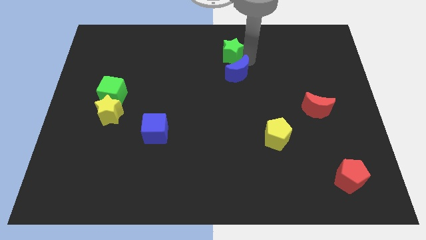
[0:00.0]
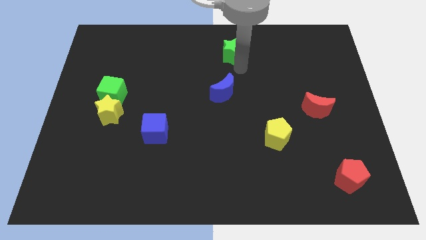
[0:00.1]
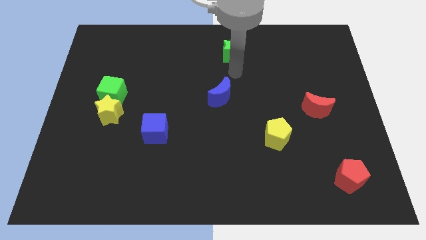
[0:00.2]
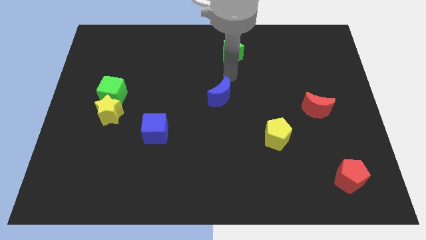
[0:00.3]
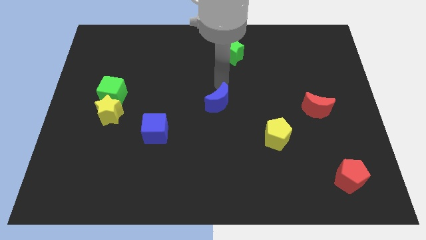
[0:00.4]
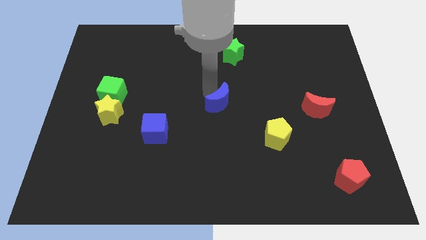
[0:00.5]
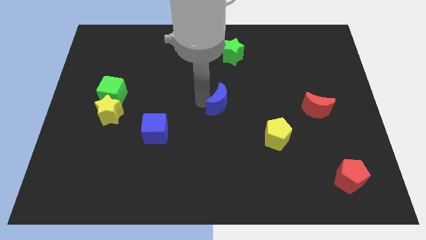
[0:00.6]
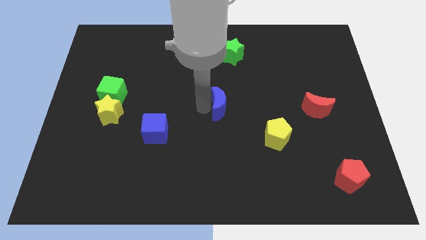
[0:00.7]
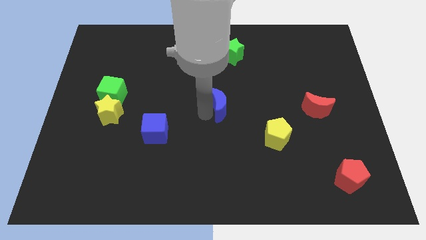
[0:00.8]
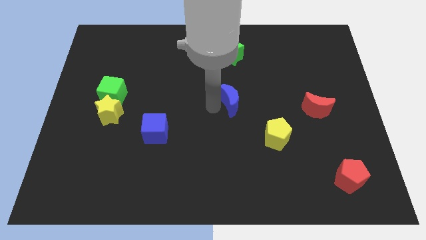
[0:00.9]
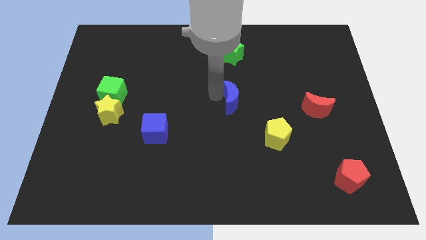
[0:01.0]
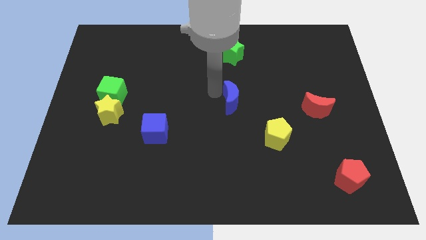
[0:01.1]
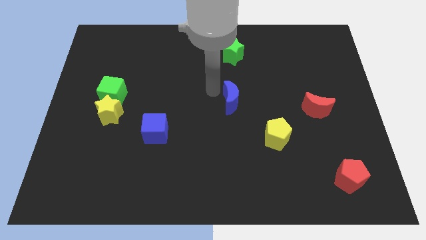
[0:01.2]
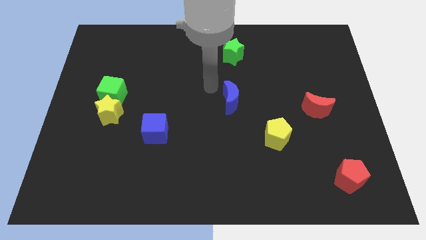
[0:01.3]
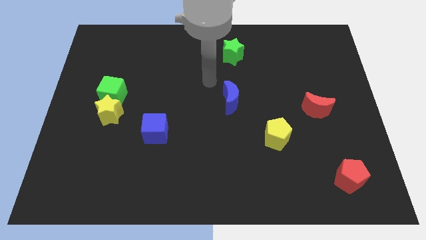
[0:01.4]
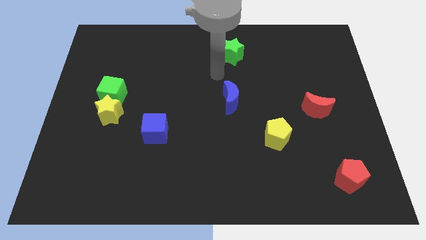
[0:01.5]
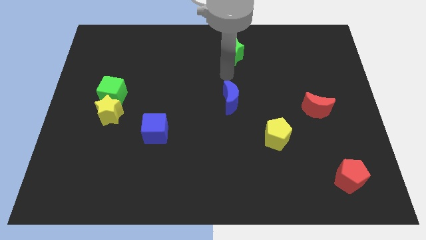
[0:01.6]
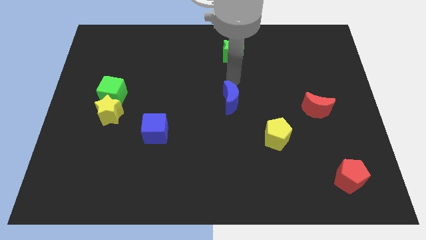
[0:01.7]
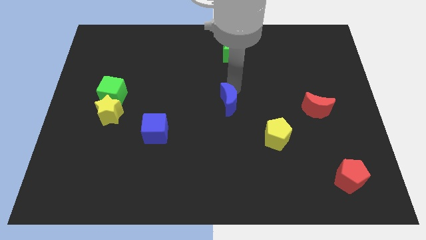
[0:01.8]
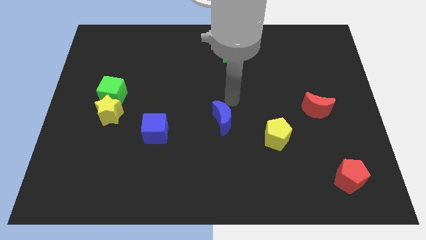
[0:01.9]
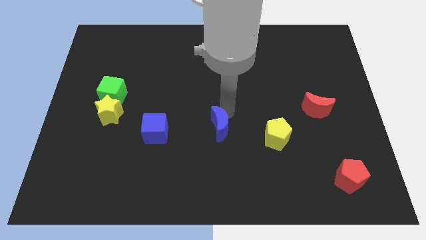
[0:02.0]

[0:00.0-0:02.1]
separate blue moon from green star

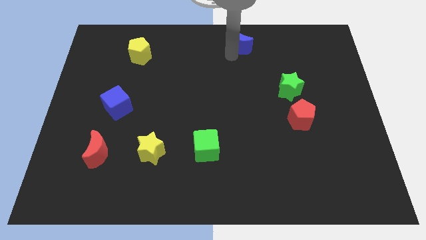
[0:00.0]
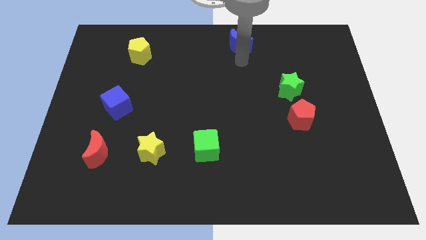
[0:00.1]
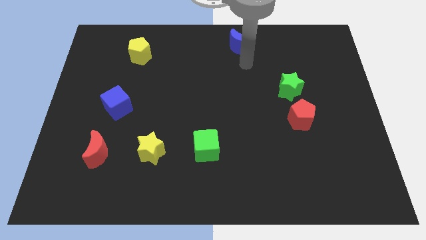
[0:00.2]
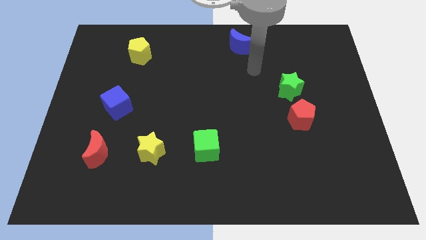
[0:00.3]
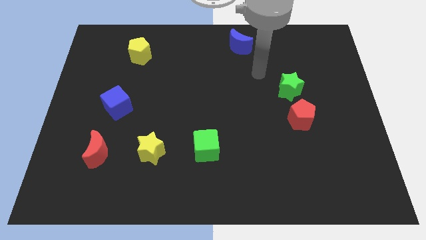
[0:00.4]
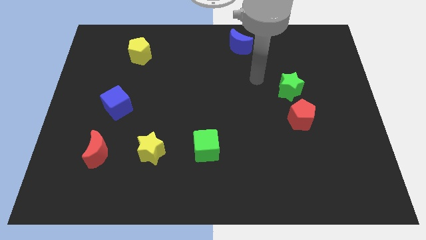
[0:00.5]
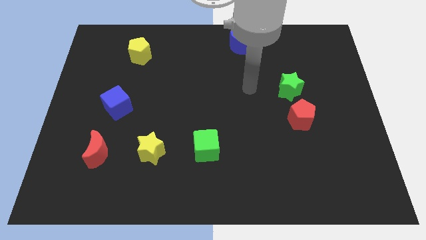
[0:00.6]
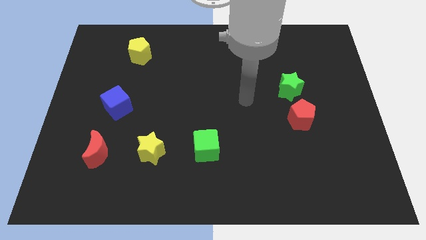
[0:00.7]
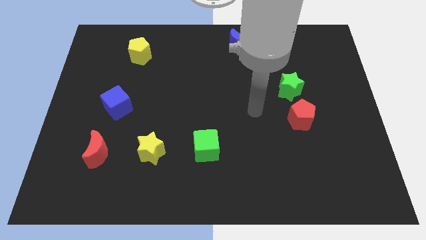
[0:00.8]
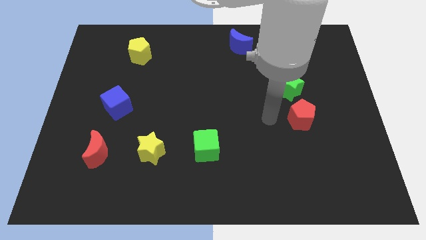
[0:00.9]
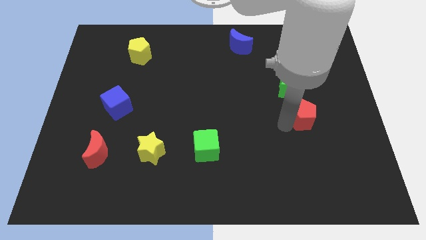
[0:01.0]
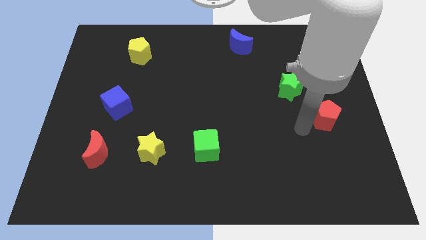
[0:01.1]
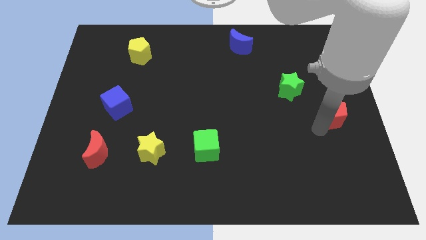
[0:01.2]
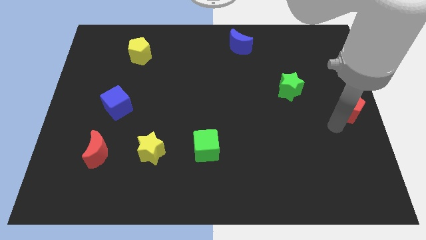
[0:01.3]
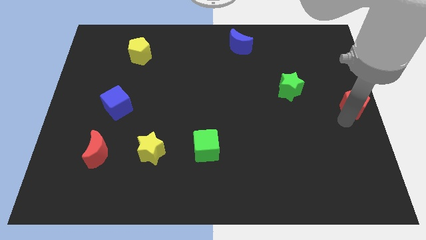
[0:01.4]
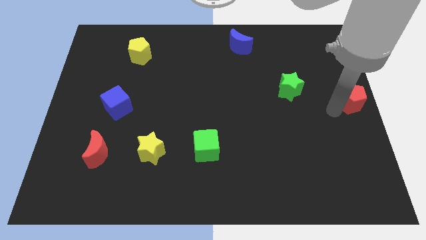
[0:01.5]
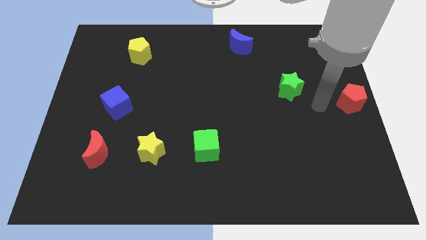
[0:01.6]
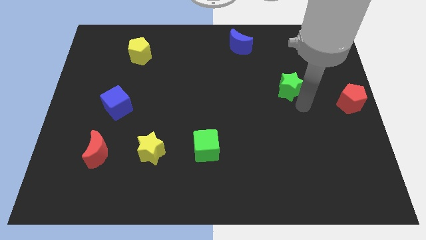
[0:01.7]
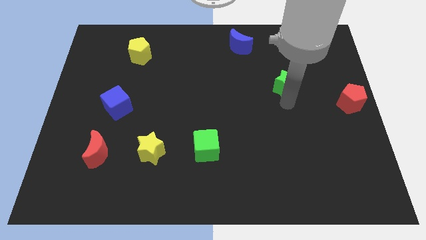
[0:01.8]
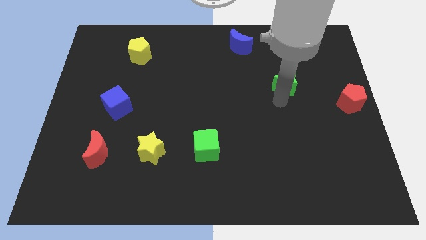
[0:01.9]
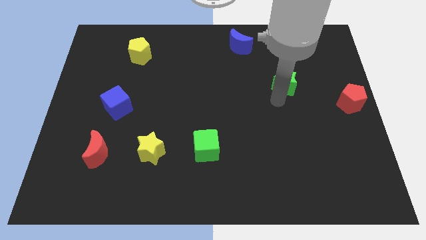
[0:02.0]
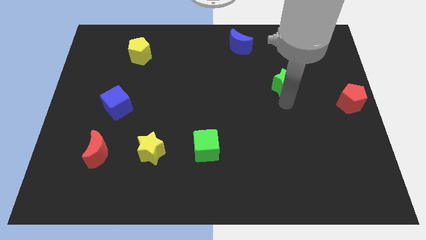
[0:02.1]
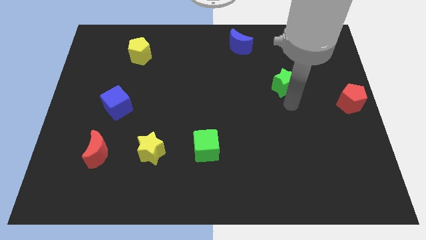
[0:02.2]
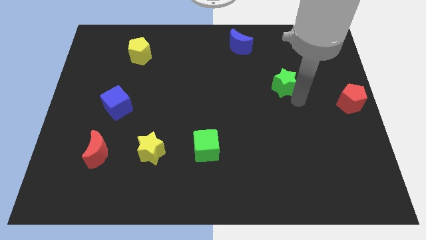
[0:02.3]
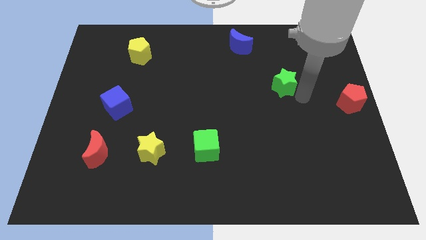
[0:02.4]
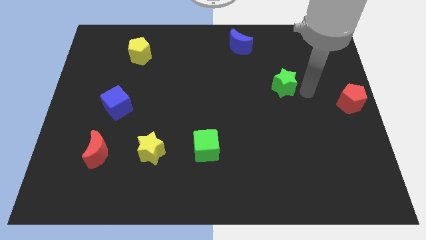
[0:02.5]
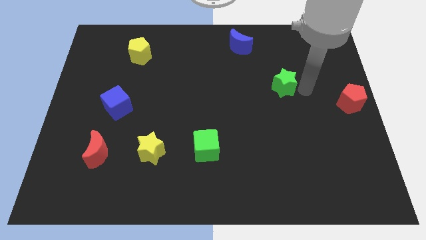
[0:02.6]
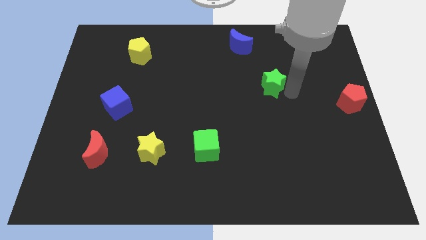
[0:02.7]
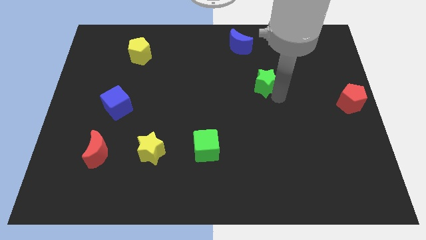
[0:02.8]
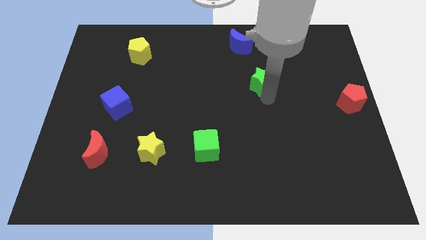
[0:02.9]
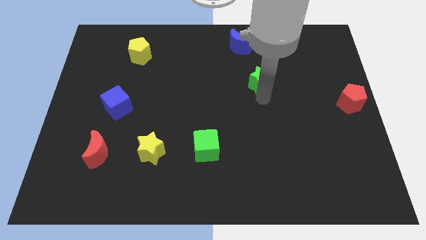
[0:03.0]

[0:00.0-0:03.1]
push the green star and red pentagon in opposite directions

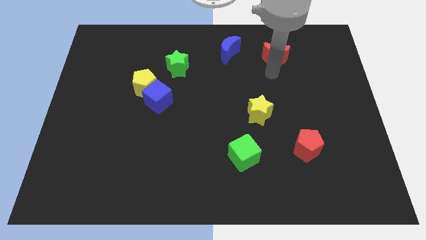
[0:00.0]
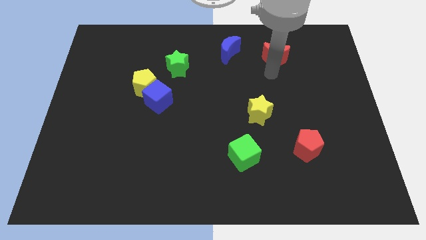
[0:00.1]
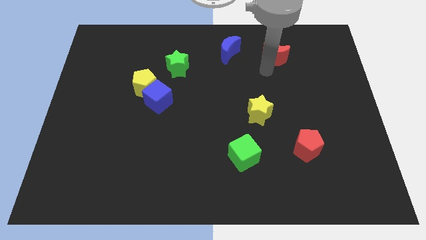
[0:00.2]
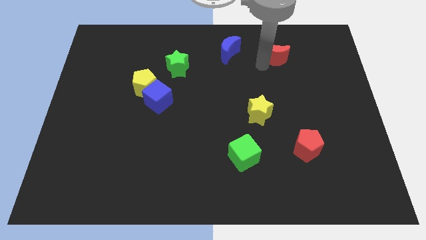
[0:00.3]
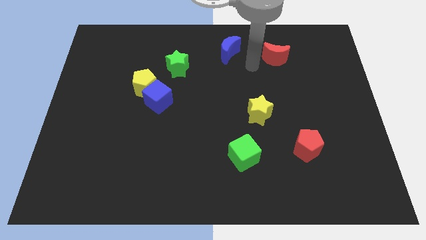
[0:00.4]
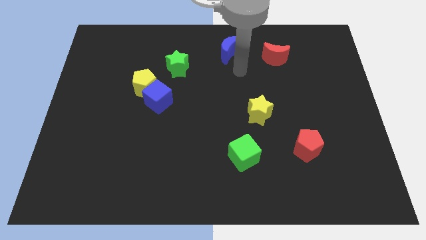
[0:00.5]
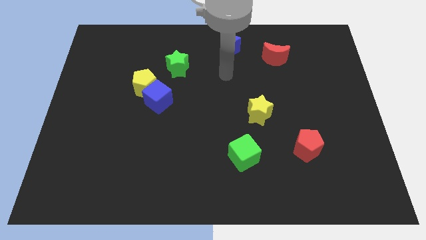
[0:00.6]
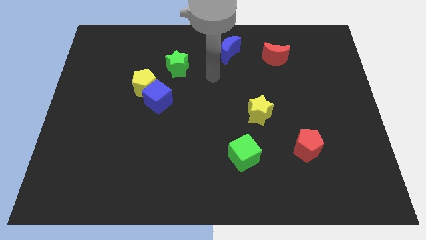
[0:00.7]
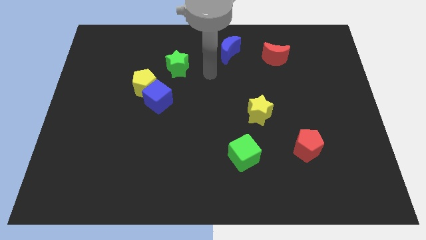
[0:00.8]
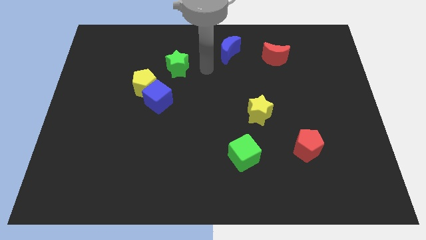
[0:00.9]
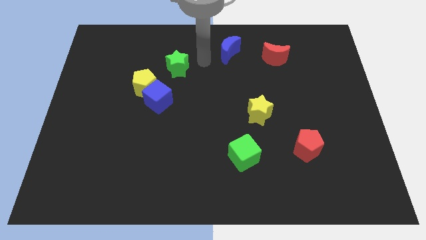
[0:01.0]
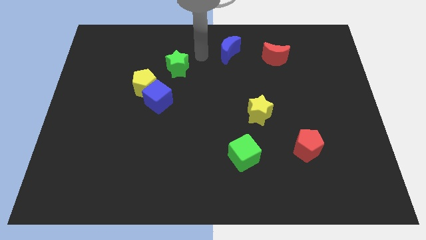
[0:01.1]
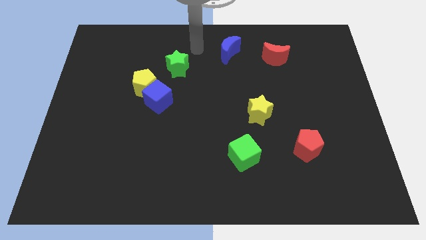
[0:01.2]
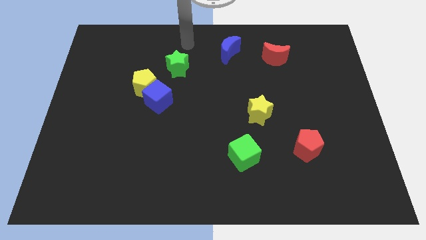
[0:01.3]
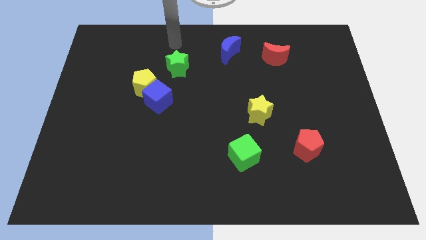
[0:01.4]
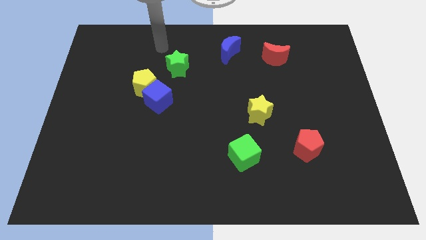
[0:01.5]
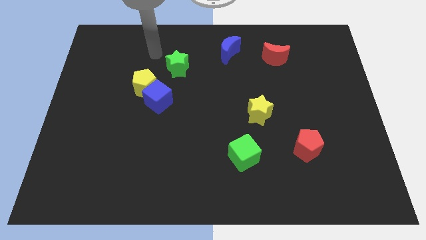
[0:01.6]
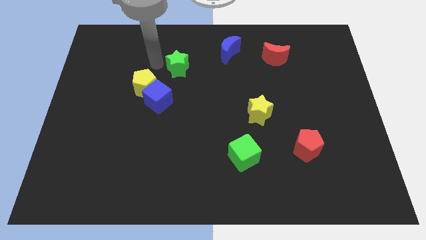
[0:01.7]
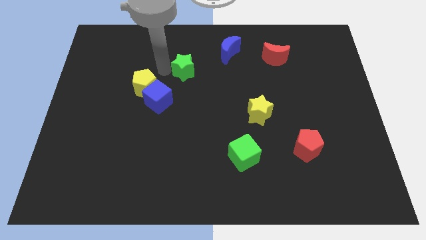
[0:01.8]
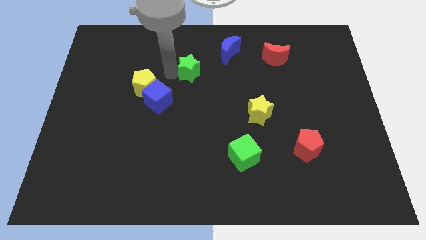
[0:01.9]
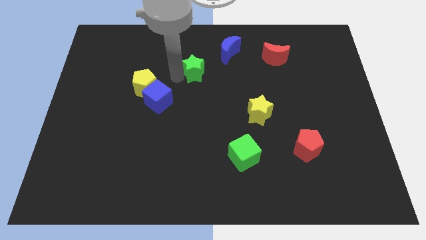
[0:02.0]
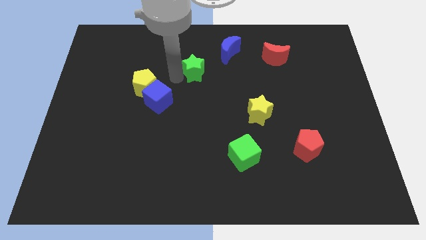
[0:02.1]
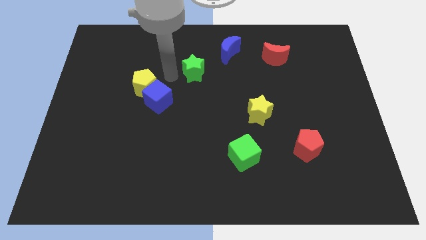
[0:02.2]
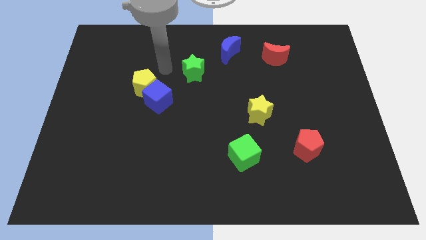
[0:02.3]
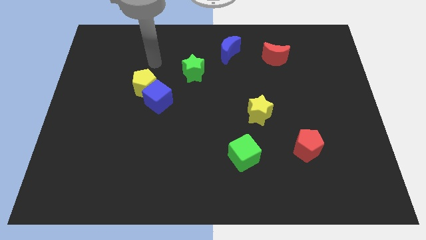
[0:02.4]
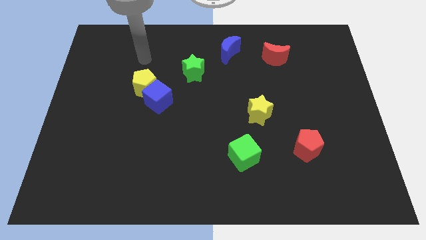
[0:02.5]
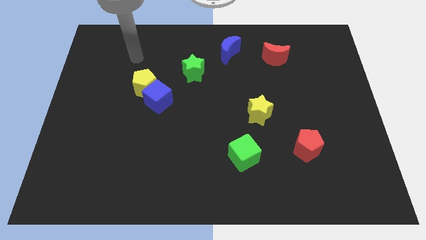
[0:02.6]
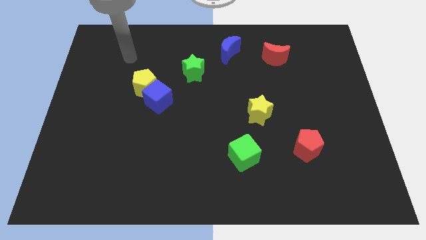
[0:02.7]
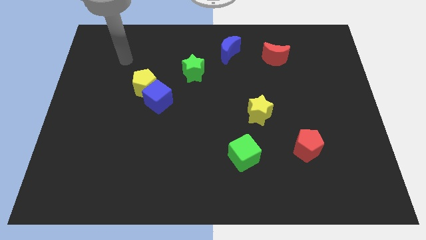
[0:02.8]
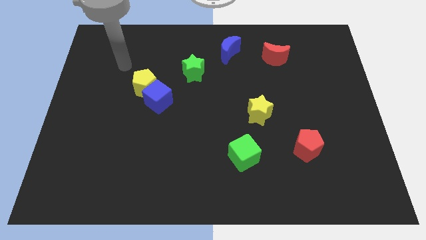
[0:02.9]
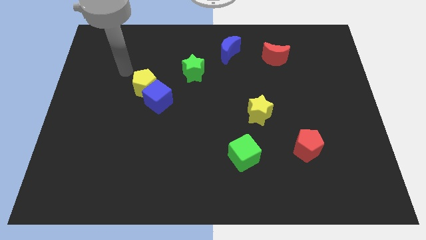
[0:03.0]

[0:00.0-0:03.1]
slide green star to the top right of blue cube

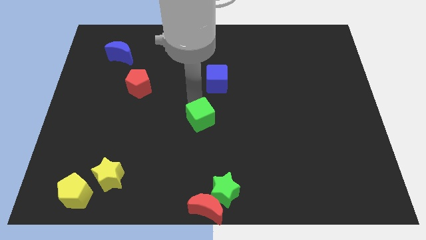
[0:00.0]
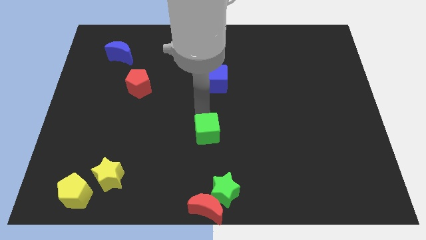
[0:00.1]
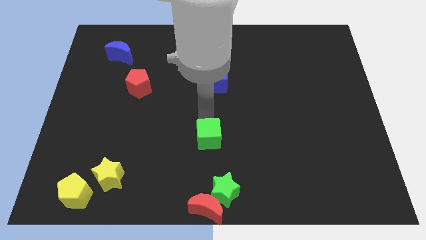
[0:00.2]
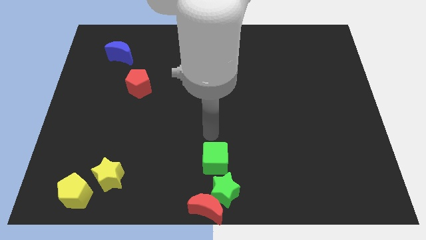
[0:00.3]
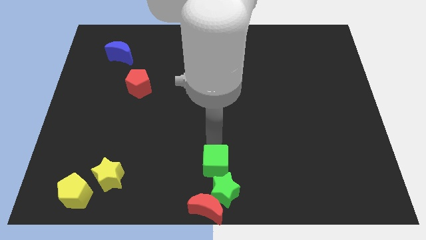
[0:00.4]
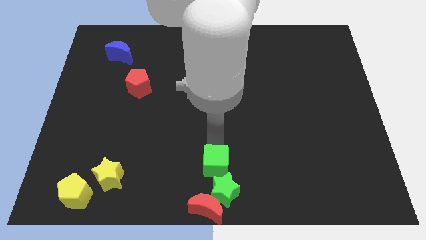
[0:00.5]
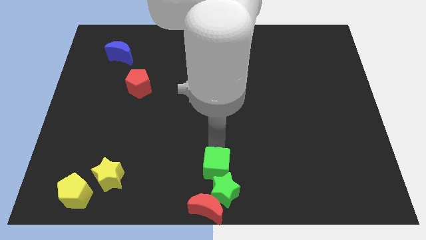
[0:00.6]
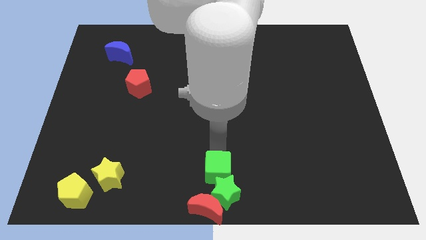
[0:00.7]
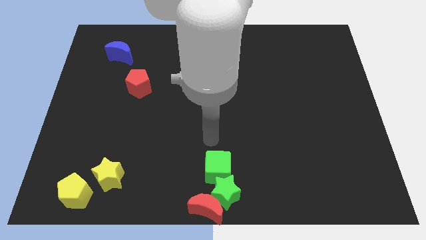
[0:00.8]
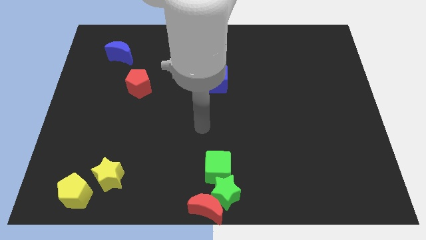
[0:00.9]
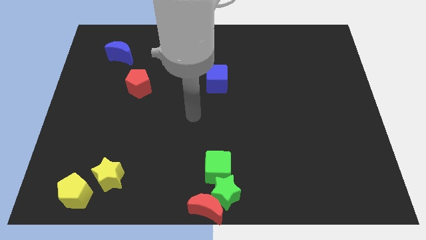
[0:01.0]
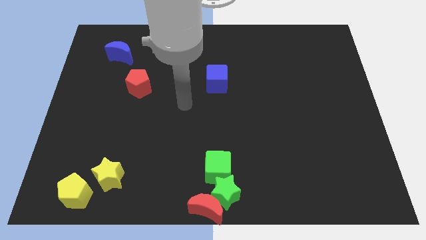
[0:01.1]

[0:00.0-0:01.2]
push the green cube into the green star
